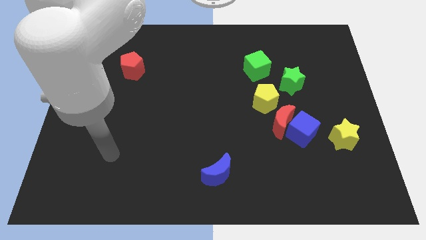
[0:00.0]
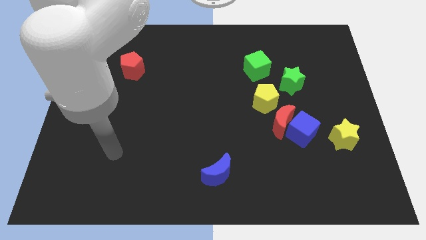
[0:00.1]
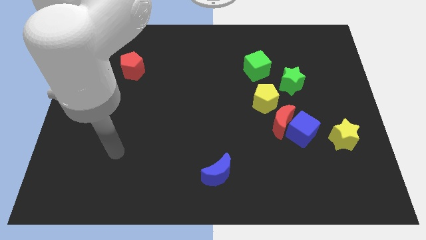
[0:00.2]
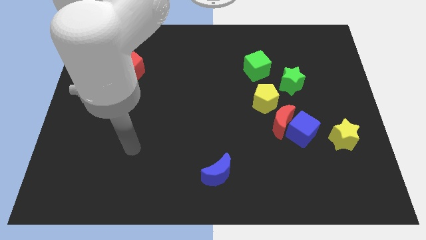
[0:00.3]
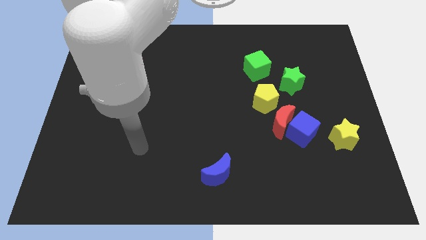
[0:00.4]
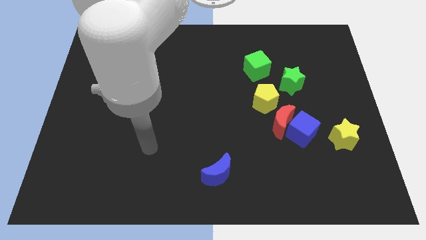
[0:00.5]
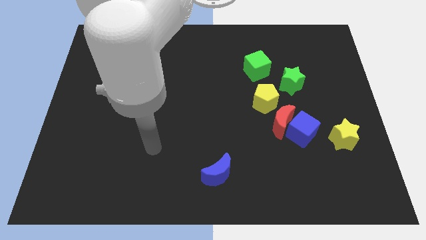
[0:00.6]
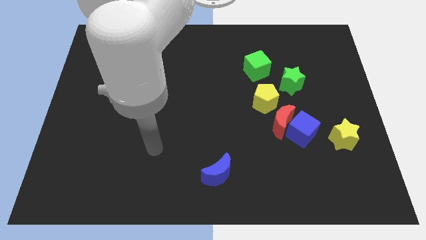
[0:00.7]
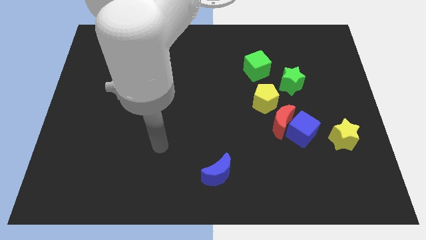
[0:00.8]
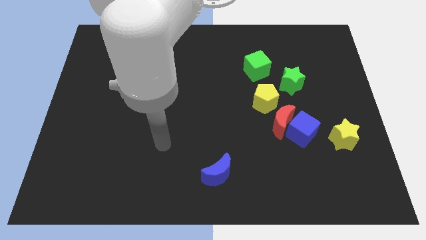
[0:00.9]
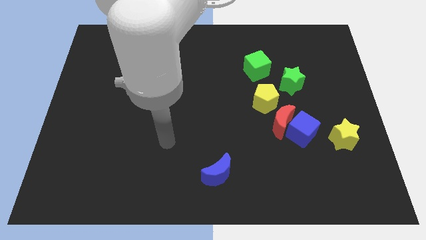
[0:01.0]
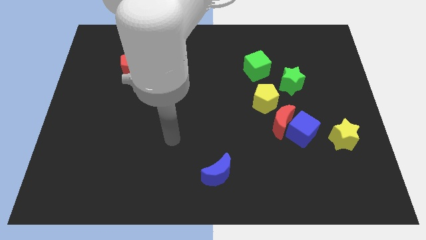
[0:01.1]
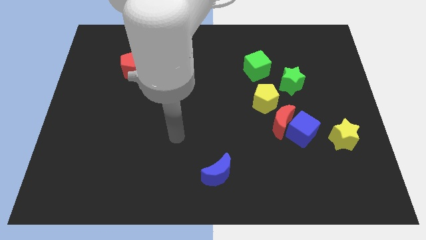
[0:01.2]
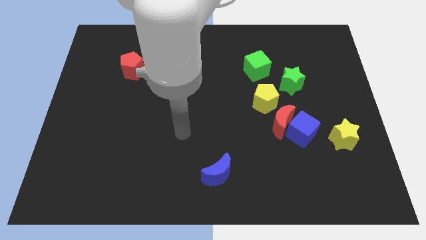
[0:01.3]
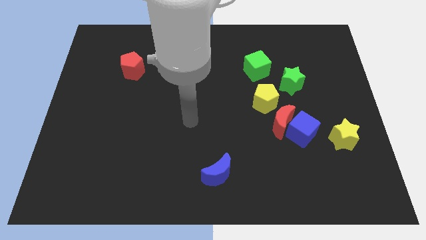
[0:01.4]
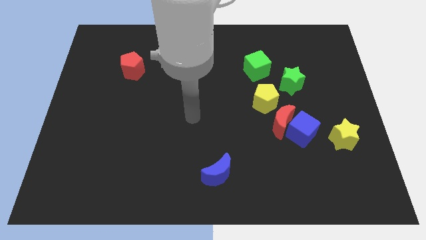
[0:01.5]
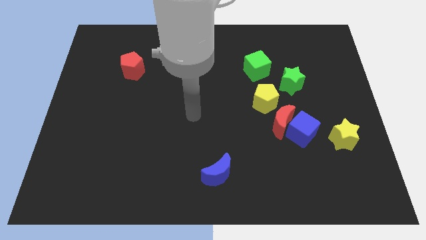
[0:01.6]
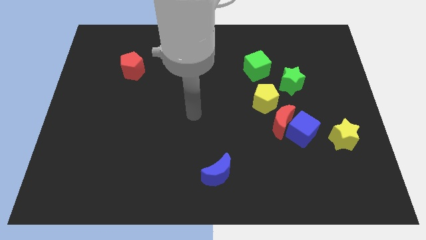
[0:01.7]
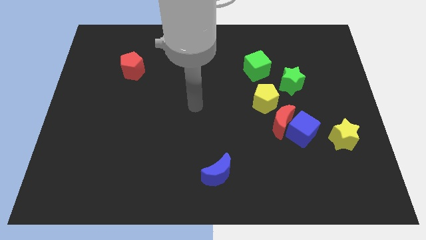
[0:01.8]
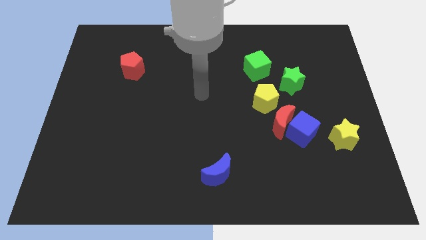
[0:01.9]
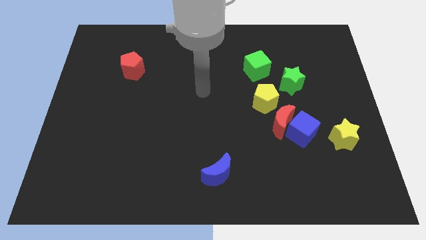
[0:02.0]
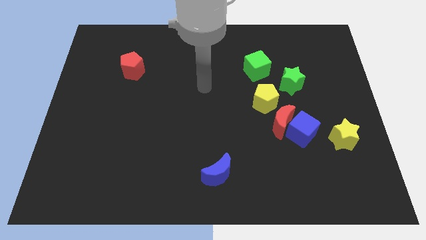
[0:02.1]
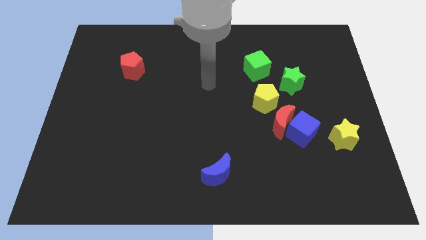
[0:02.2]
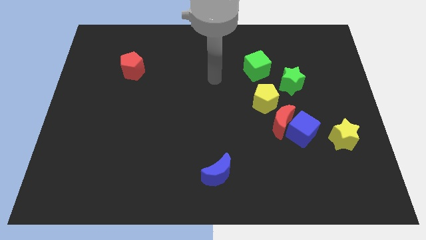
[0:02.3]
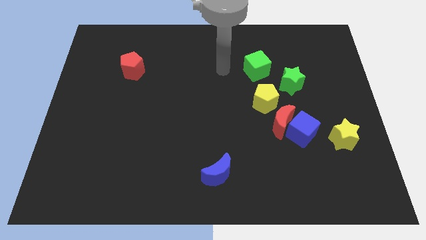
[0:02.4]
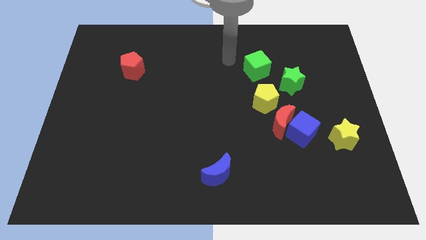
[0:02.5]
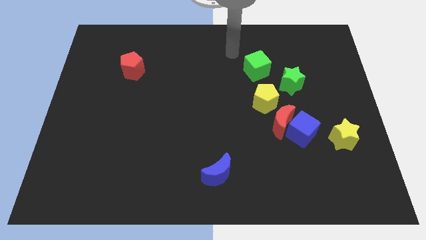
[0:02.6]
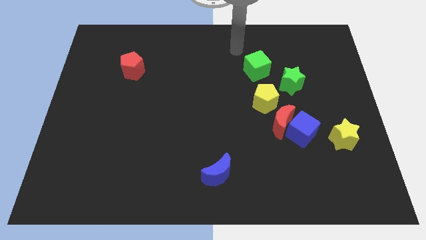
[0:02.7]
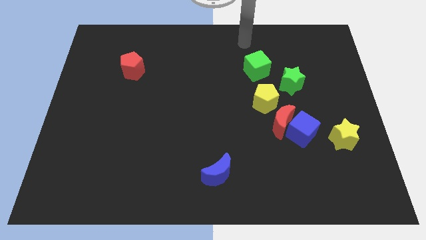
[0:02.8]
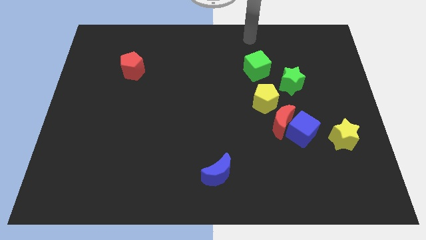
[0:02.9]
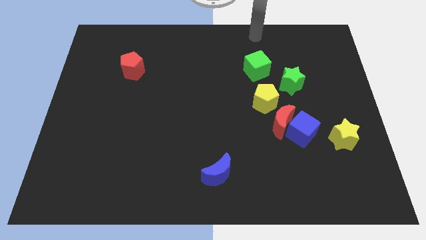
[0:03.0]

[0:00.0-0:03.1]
move your arm to the top side of the green cube

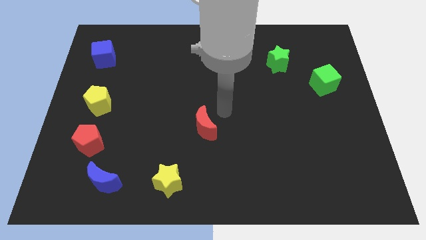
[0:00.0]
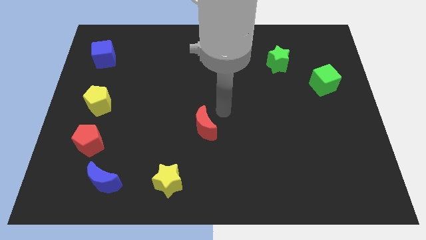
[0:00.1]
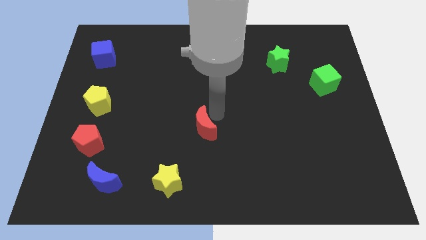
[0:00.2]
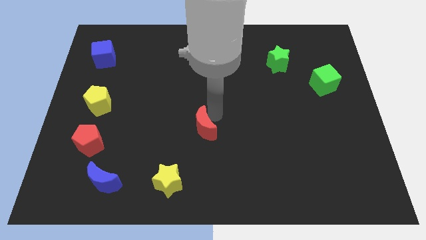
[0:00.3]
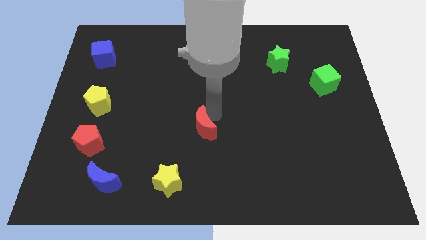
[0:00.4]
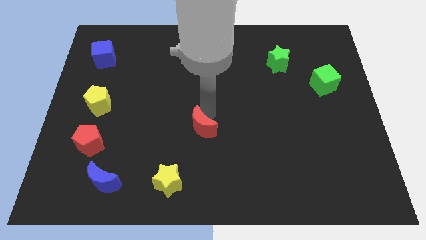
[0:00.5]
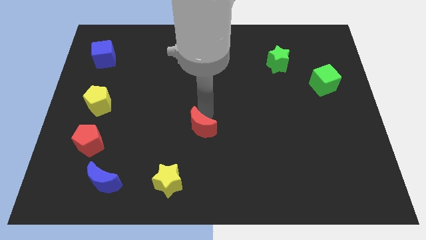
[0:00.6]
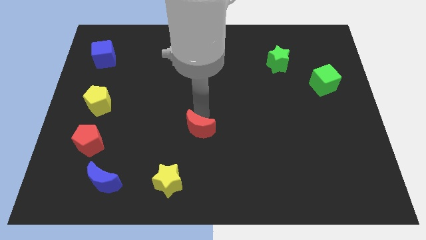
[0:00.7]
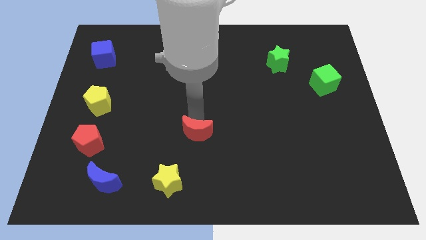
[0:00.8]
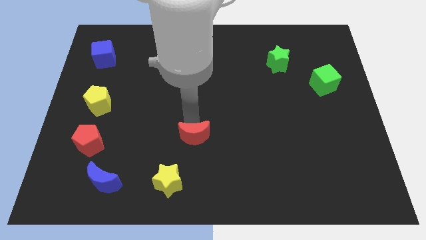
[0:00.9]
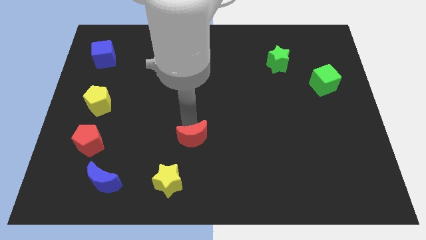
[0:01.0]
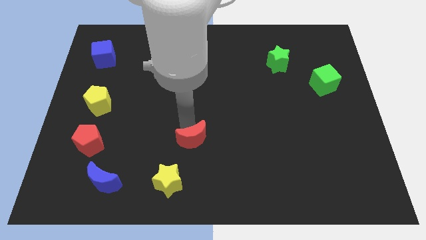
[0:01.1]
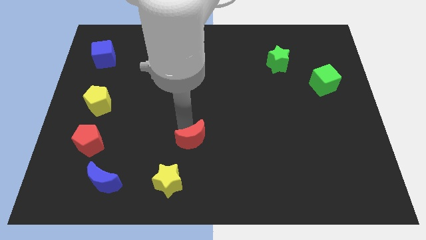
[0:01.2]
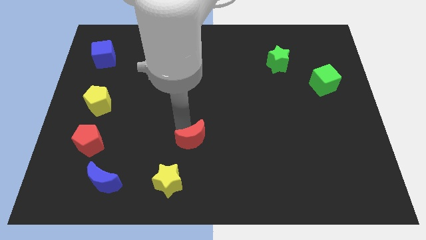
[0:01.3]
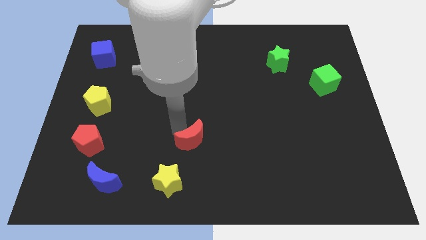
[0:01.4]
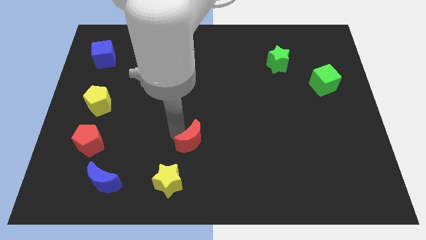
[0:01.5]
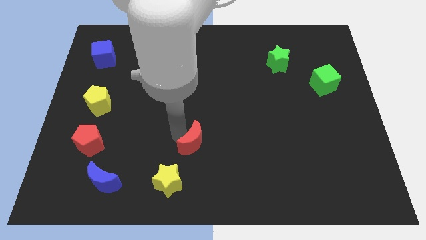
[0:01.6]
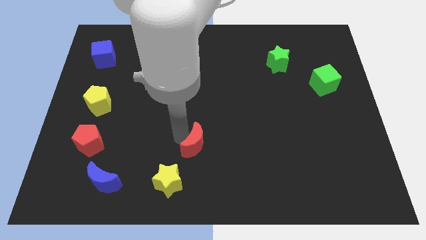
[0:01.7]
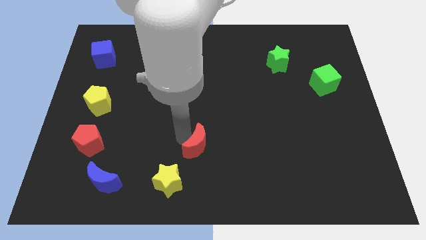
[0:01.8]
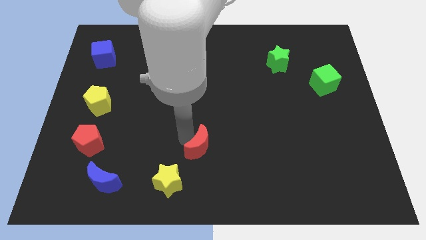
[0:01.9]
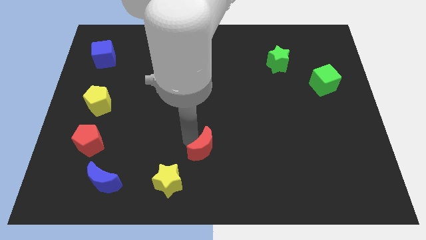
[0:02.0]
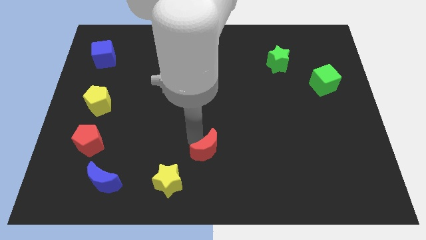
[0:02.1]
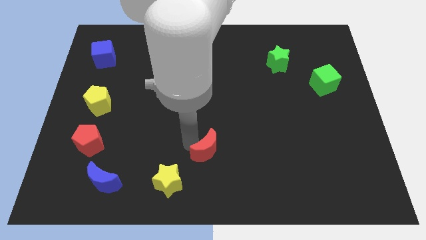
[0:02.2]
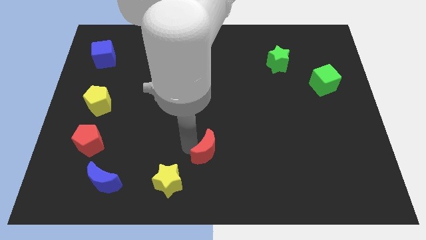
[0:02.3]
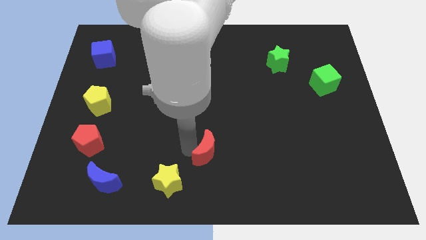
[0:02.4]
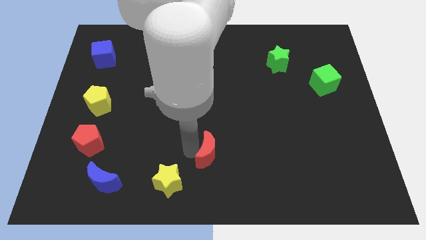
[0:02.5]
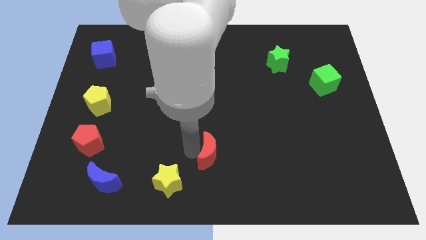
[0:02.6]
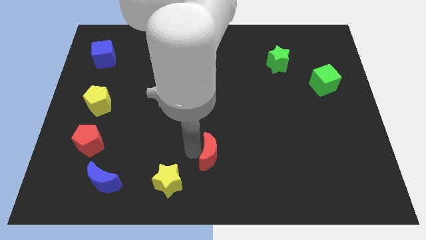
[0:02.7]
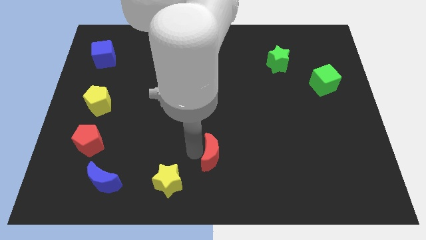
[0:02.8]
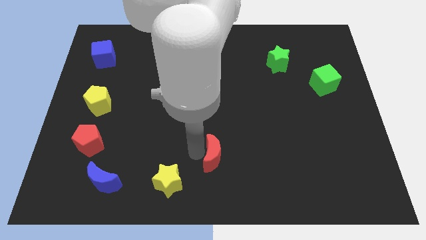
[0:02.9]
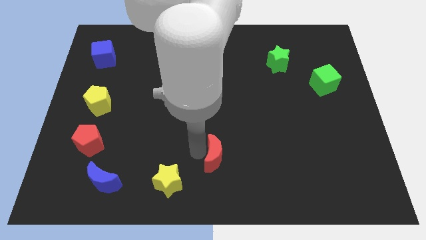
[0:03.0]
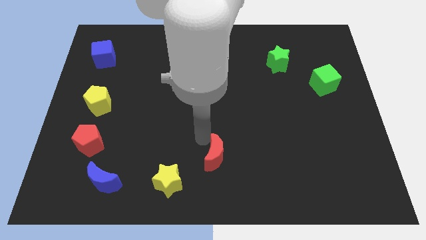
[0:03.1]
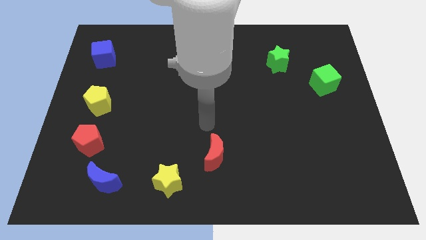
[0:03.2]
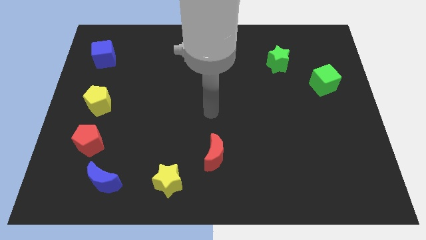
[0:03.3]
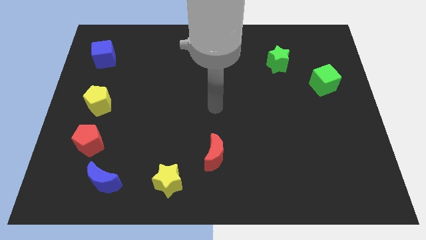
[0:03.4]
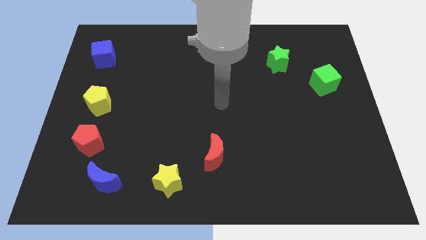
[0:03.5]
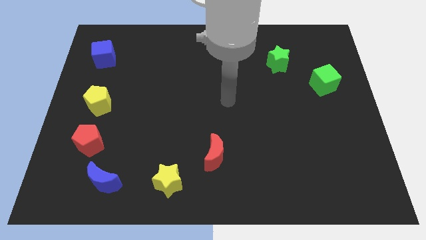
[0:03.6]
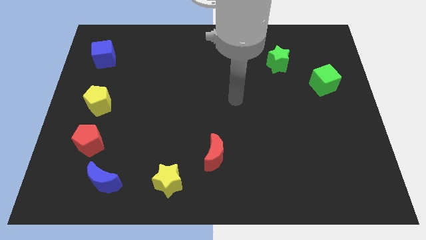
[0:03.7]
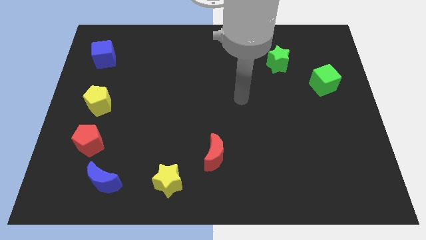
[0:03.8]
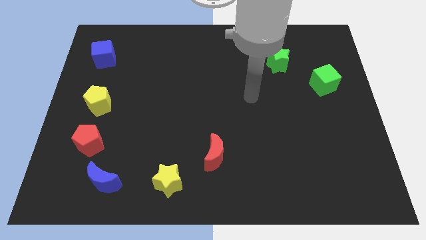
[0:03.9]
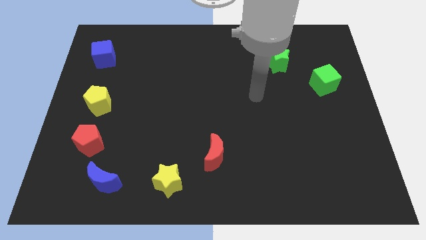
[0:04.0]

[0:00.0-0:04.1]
place the red crescent at the top right side of yellow star

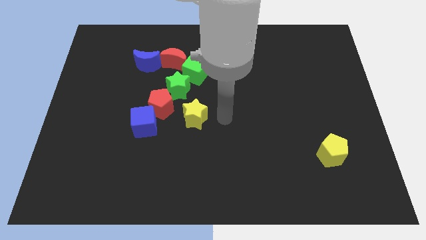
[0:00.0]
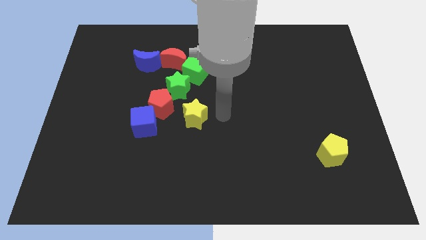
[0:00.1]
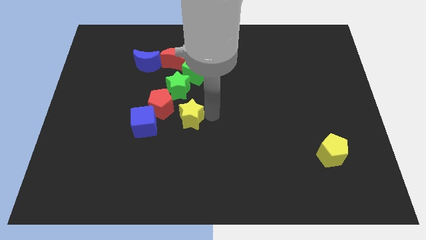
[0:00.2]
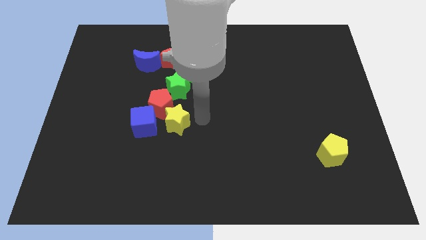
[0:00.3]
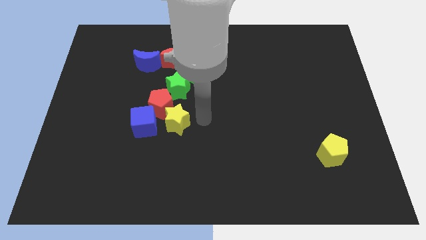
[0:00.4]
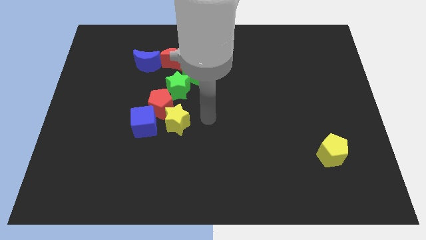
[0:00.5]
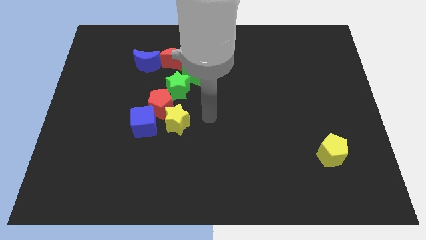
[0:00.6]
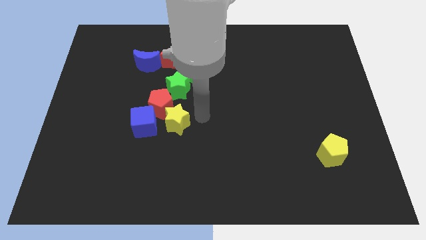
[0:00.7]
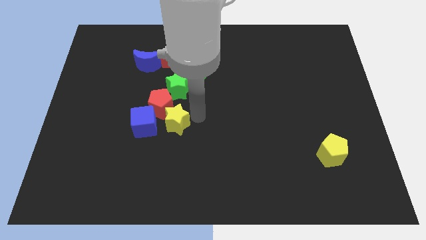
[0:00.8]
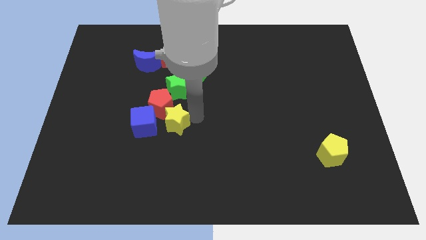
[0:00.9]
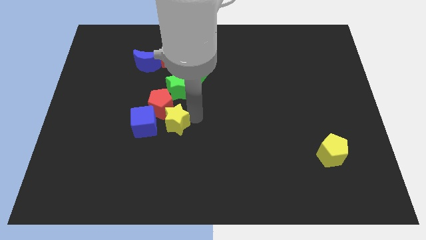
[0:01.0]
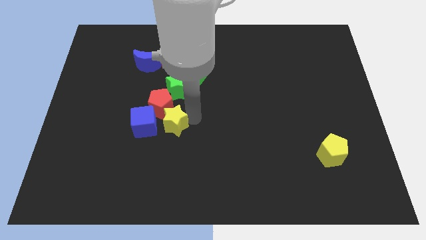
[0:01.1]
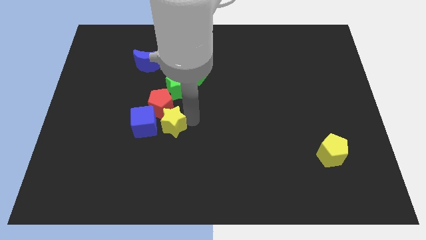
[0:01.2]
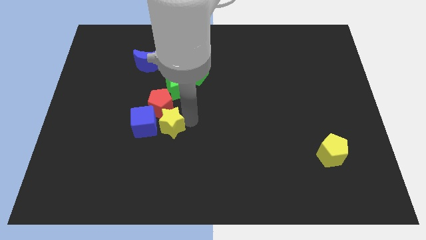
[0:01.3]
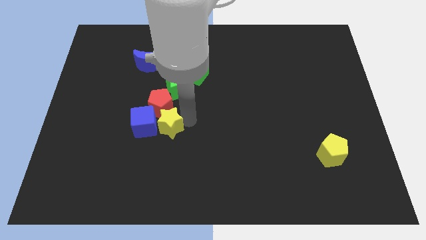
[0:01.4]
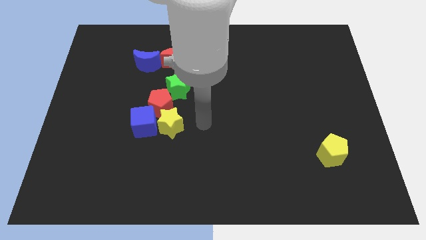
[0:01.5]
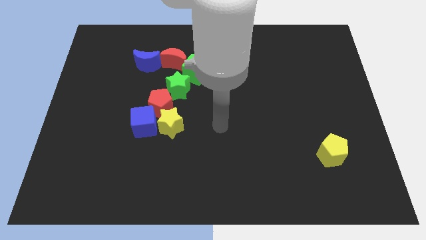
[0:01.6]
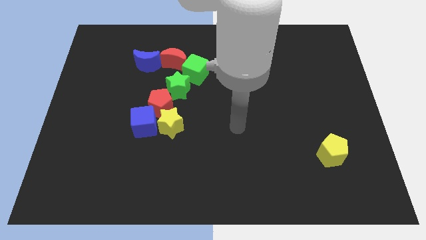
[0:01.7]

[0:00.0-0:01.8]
push the yellow star into the blue cube
